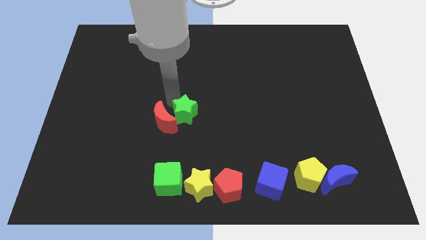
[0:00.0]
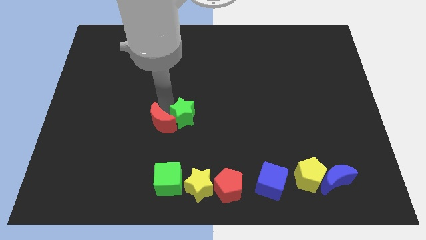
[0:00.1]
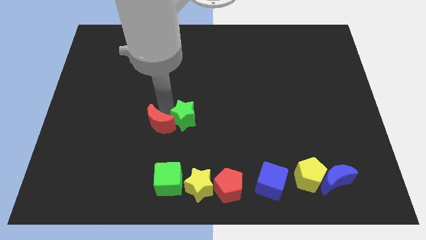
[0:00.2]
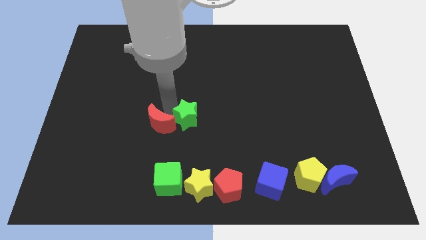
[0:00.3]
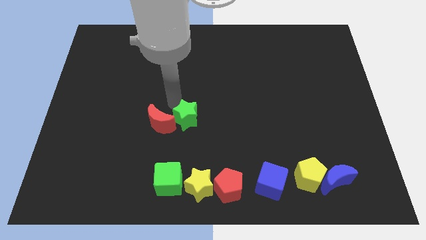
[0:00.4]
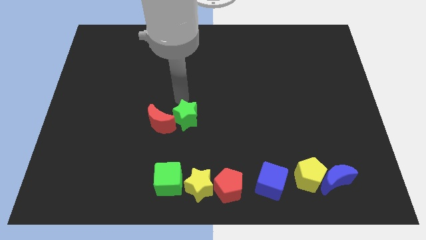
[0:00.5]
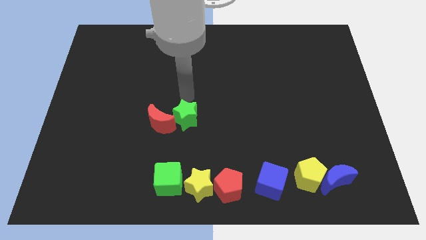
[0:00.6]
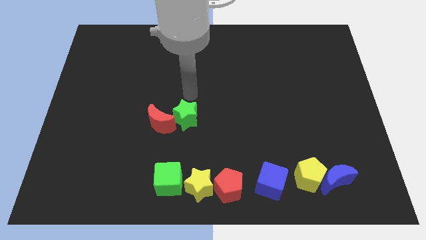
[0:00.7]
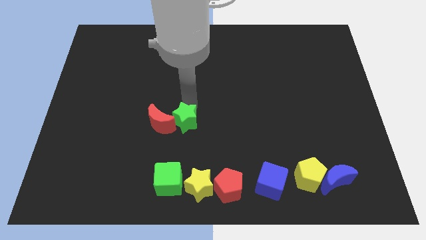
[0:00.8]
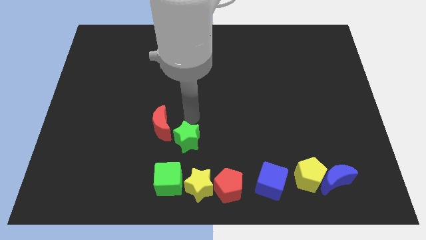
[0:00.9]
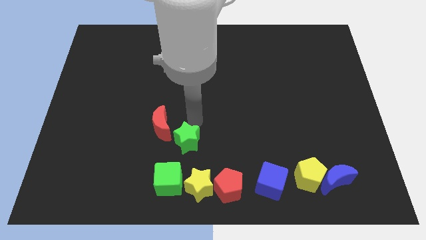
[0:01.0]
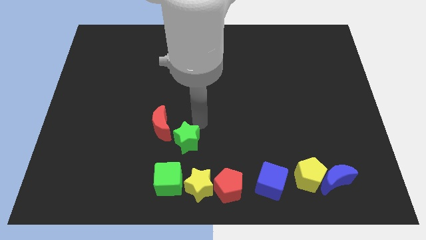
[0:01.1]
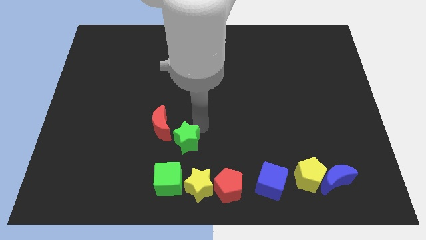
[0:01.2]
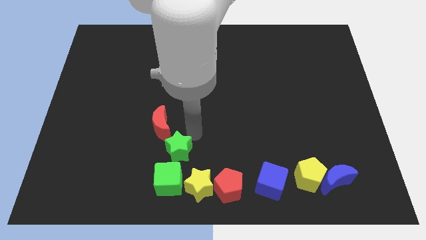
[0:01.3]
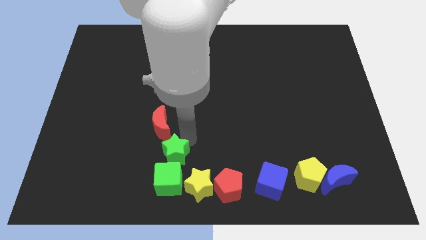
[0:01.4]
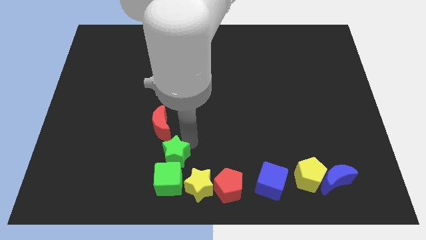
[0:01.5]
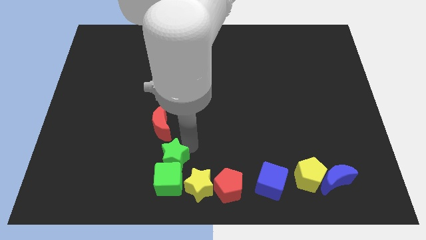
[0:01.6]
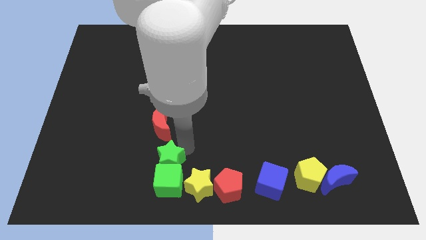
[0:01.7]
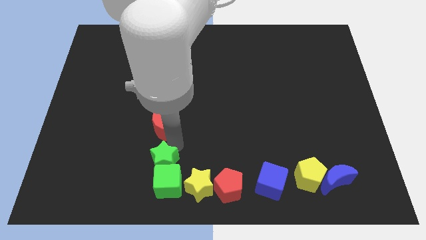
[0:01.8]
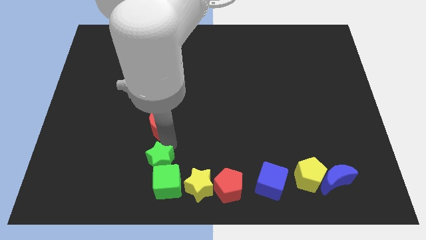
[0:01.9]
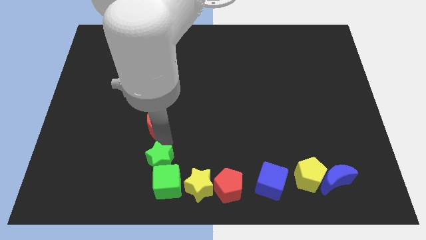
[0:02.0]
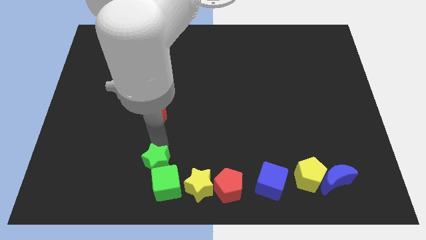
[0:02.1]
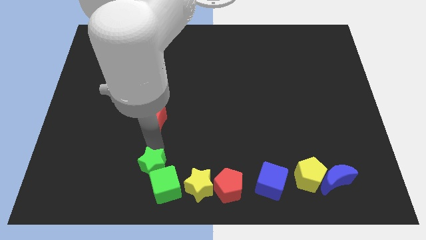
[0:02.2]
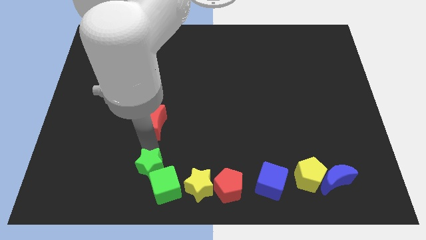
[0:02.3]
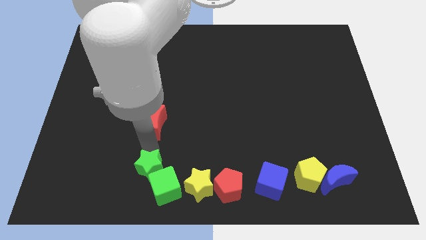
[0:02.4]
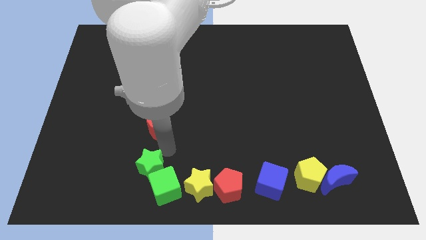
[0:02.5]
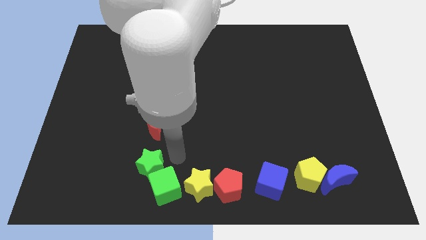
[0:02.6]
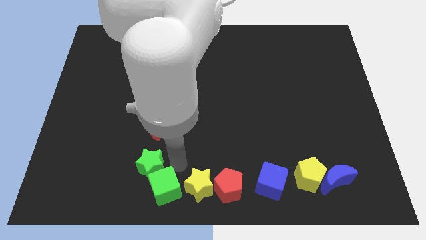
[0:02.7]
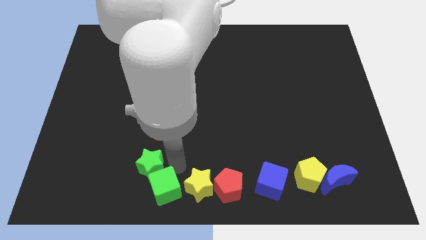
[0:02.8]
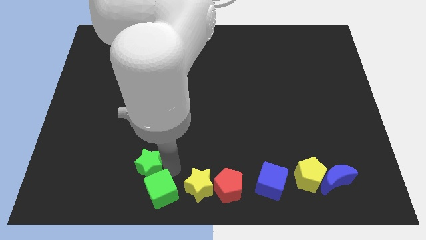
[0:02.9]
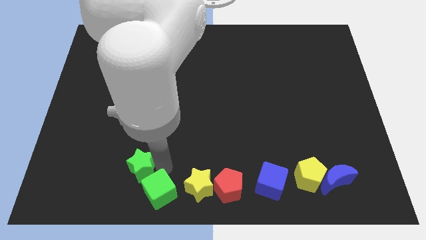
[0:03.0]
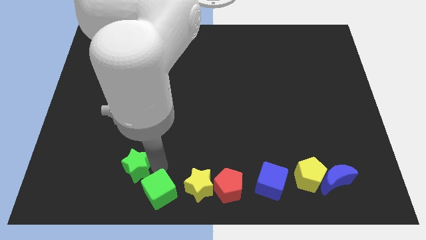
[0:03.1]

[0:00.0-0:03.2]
push the green star into green cube

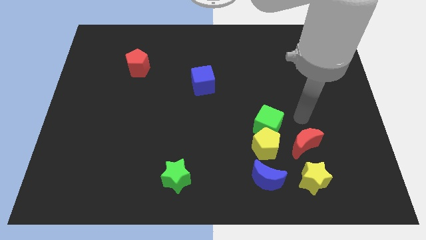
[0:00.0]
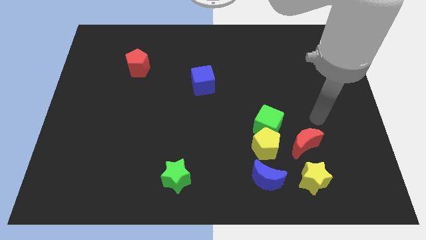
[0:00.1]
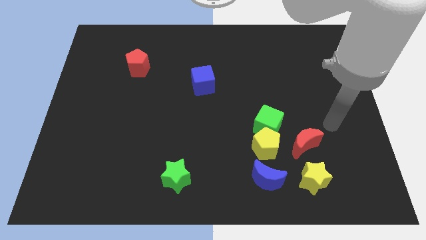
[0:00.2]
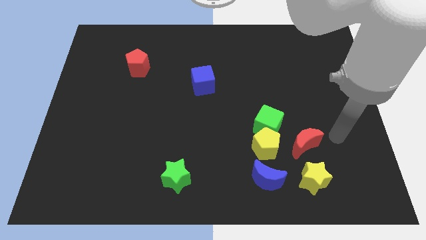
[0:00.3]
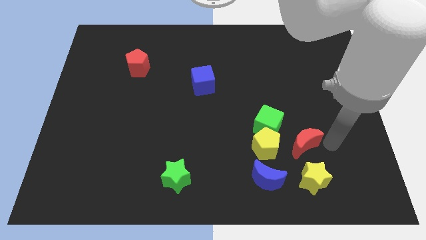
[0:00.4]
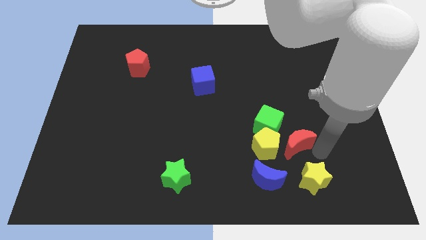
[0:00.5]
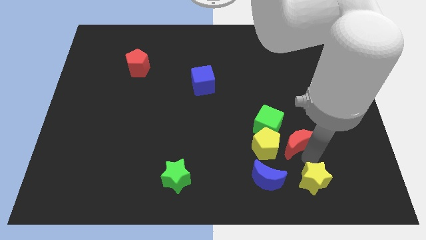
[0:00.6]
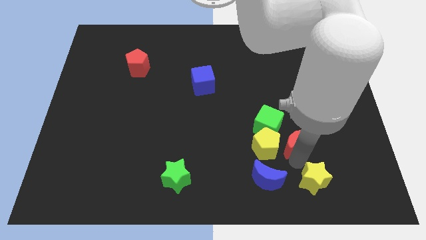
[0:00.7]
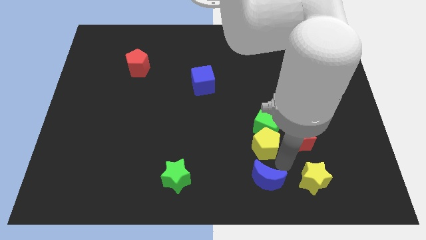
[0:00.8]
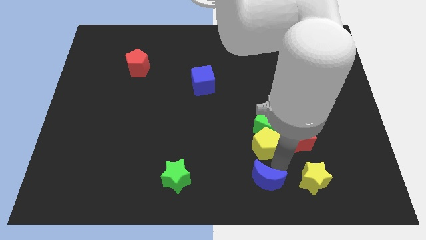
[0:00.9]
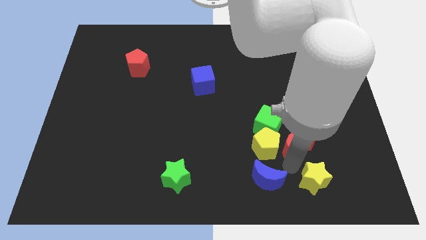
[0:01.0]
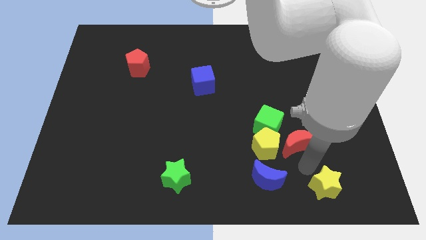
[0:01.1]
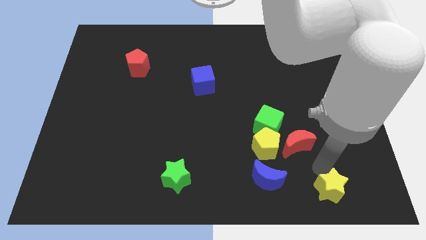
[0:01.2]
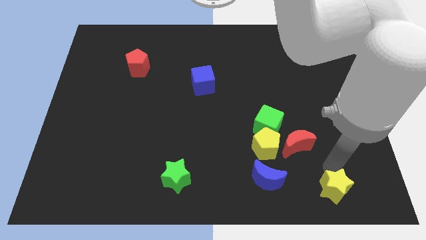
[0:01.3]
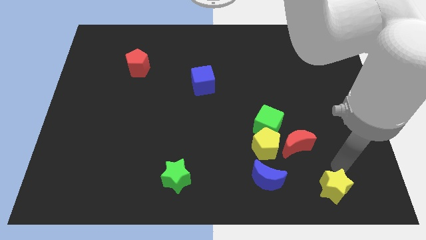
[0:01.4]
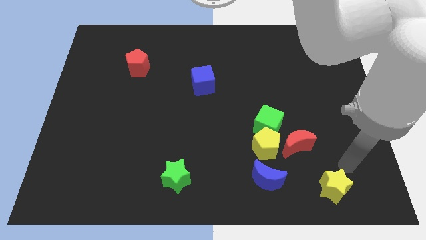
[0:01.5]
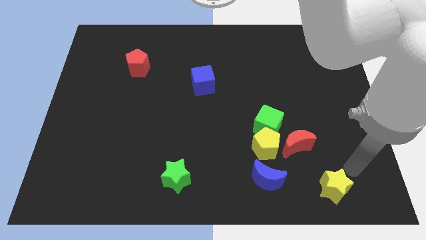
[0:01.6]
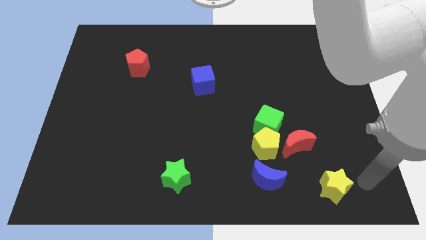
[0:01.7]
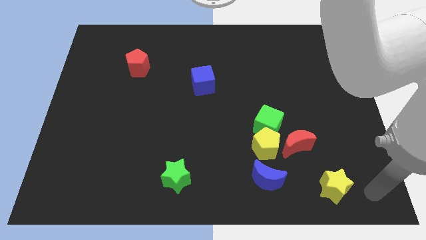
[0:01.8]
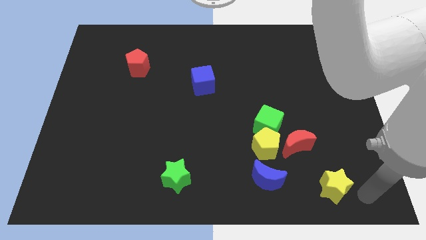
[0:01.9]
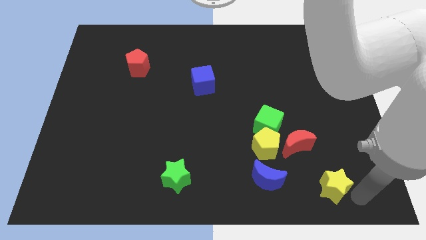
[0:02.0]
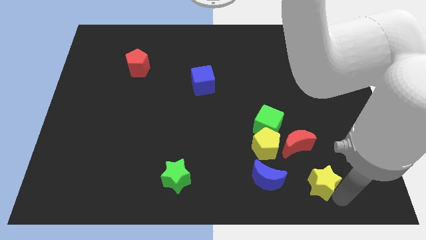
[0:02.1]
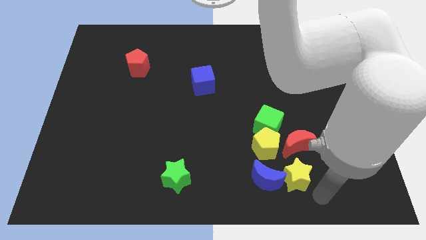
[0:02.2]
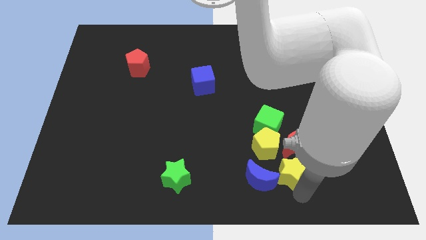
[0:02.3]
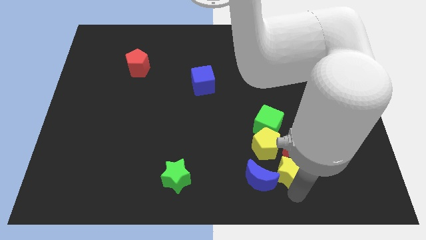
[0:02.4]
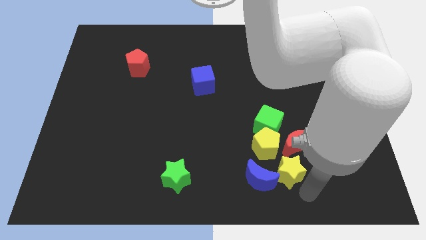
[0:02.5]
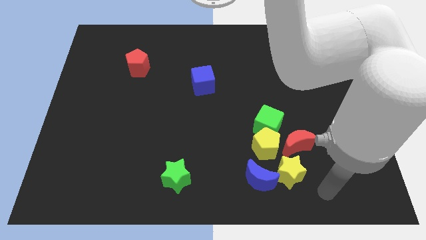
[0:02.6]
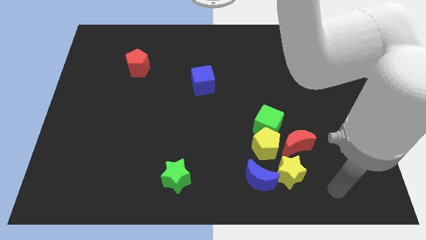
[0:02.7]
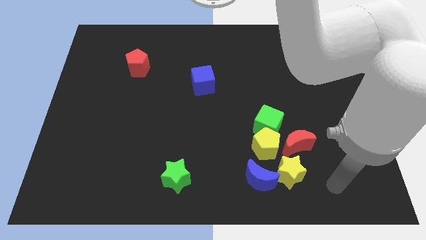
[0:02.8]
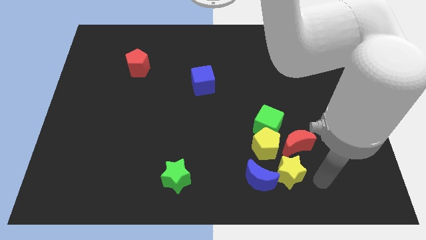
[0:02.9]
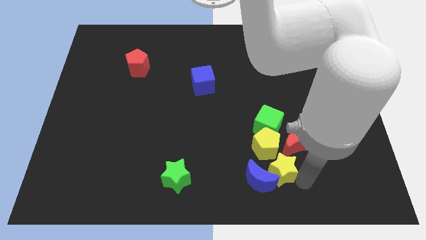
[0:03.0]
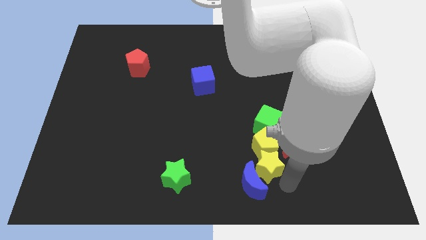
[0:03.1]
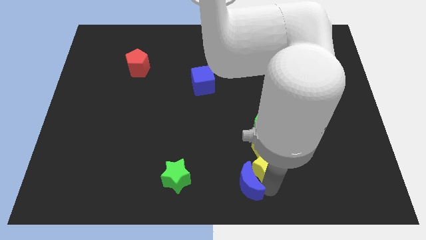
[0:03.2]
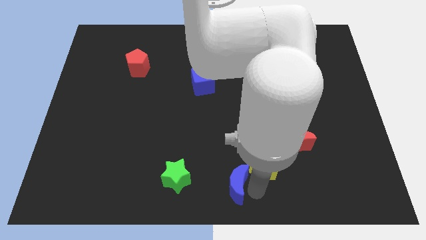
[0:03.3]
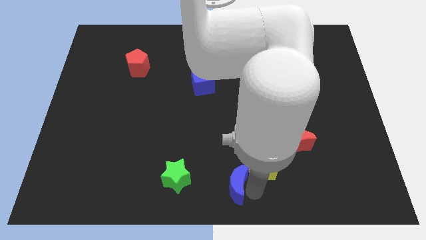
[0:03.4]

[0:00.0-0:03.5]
move the yellow star into the blue moon

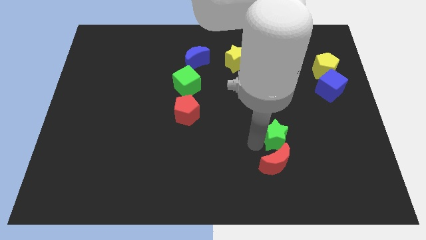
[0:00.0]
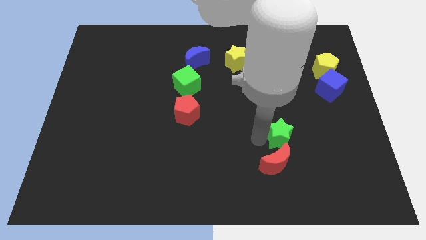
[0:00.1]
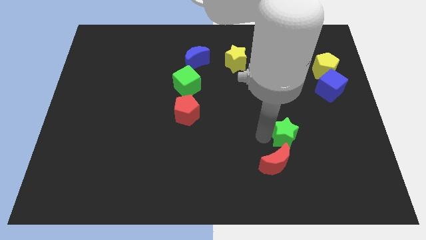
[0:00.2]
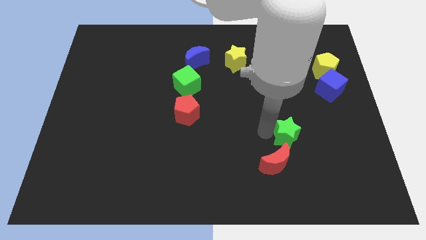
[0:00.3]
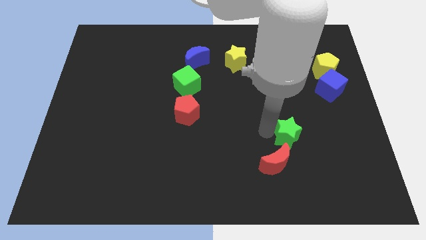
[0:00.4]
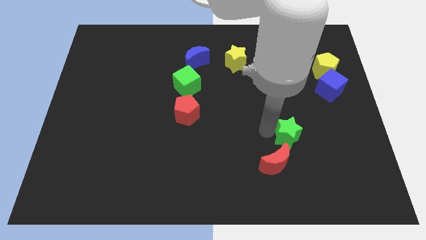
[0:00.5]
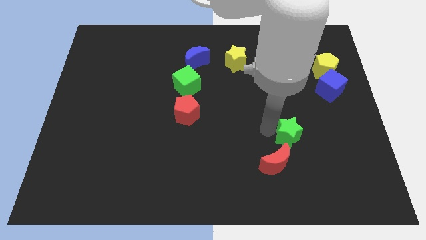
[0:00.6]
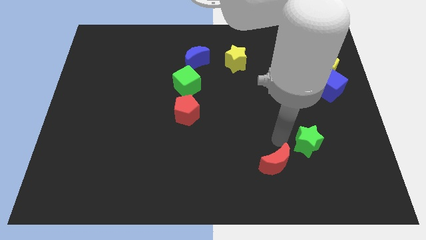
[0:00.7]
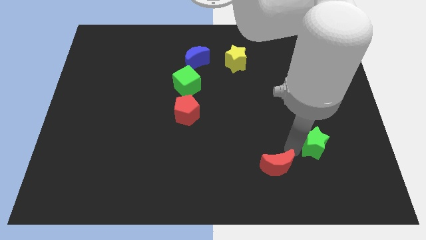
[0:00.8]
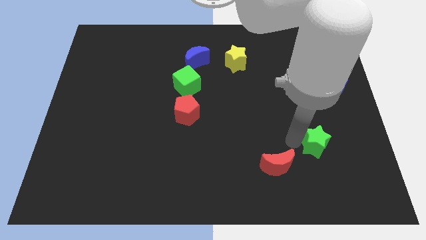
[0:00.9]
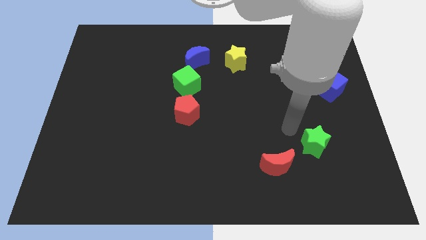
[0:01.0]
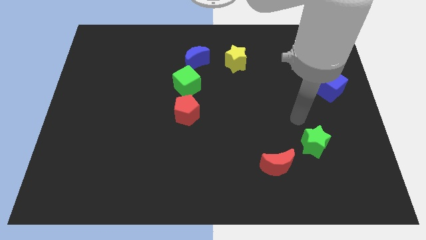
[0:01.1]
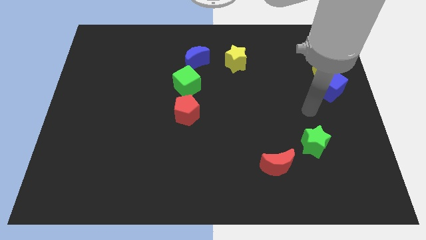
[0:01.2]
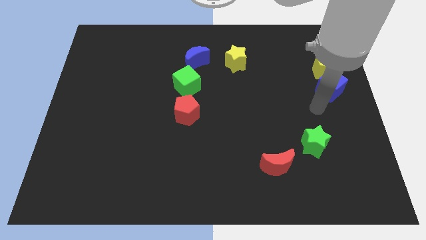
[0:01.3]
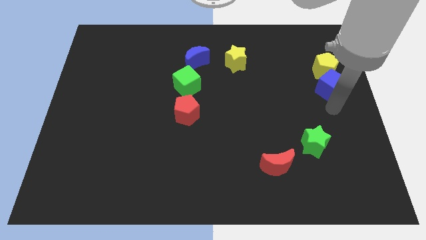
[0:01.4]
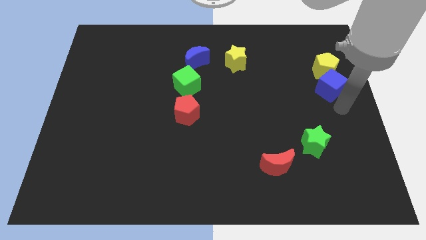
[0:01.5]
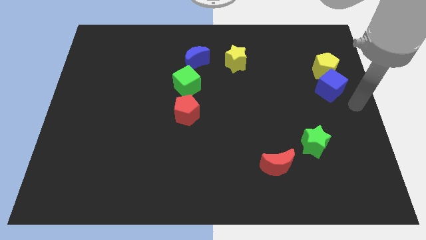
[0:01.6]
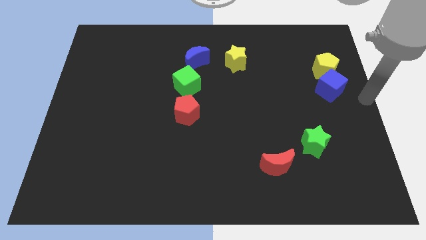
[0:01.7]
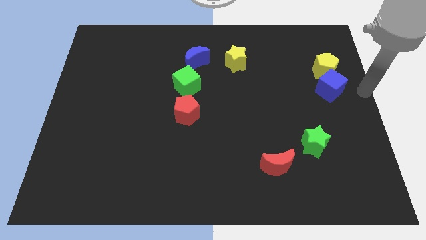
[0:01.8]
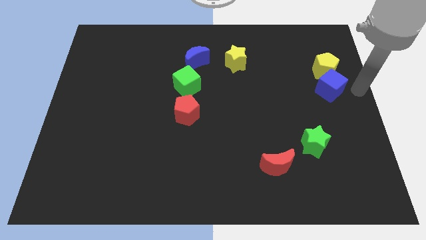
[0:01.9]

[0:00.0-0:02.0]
place the green star diagonally top right to the red moon

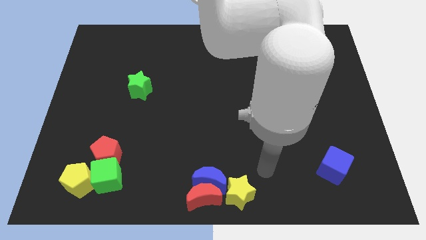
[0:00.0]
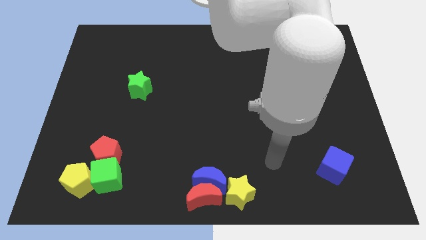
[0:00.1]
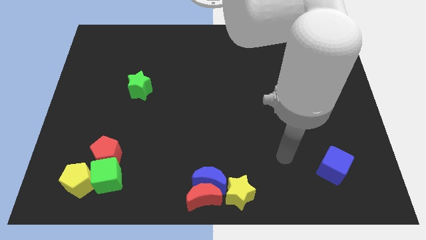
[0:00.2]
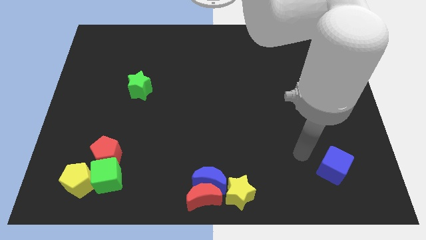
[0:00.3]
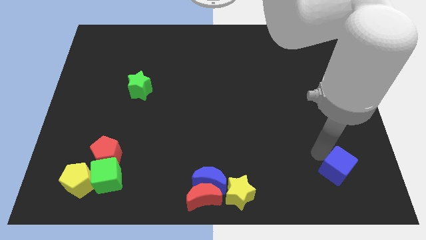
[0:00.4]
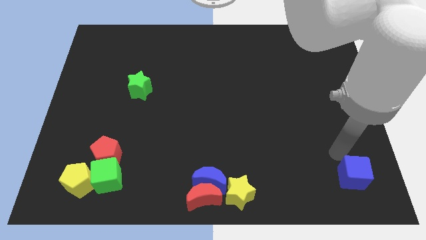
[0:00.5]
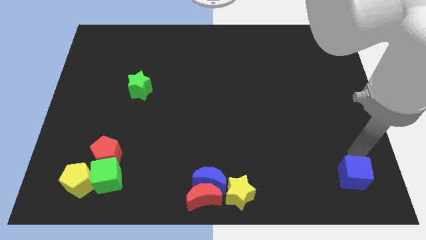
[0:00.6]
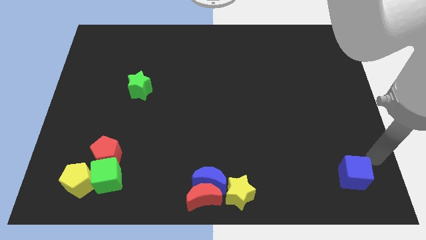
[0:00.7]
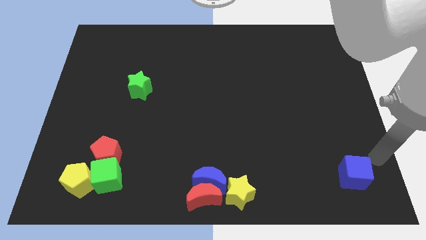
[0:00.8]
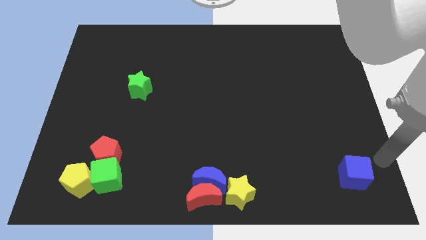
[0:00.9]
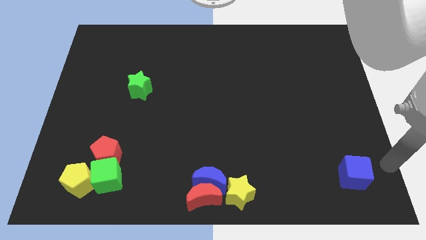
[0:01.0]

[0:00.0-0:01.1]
push the blue cube slightly right to the right bottom corner
